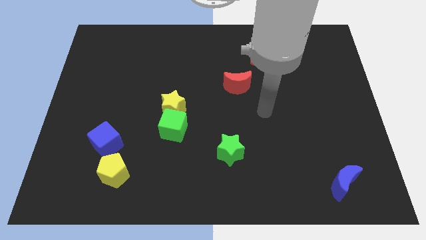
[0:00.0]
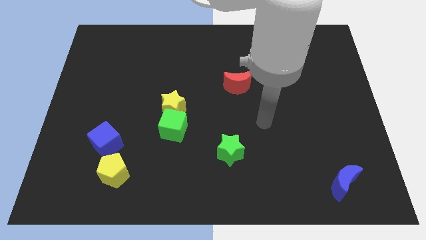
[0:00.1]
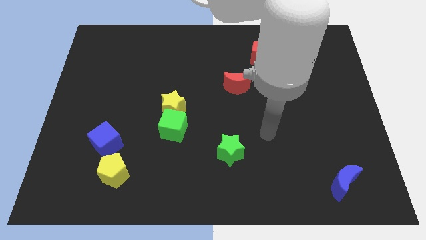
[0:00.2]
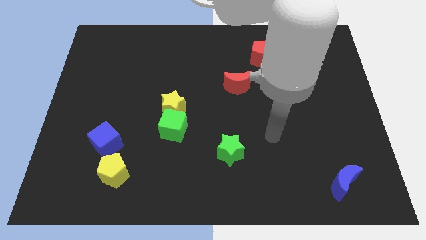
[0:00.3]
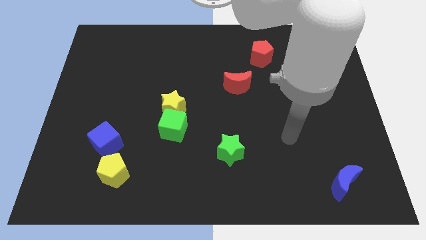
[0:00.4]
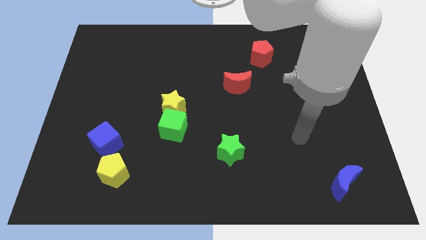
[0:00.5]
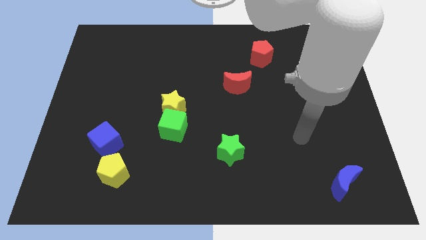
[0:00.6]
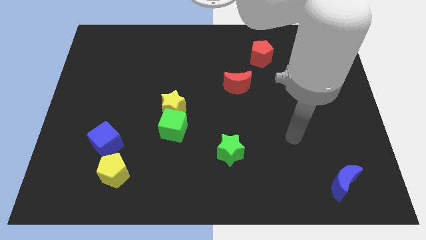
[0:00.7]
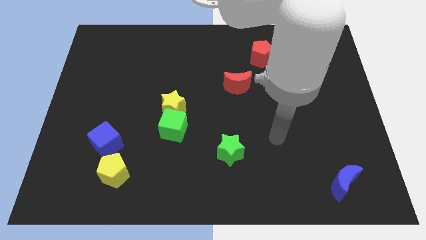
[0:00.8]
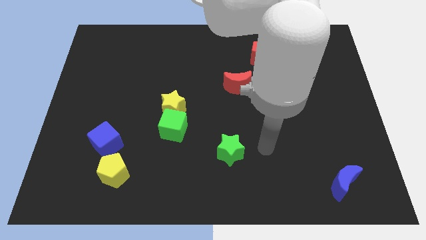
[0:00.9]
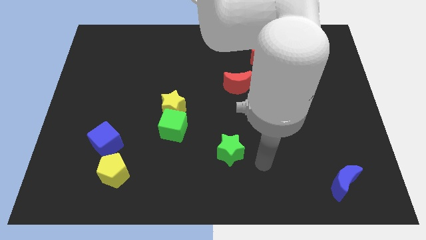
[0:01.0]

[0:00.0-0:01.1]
point your arm at the right of the green star

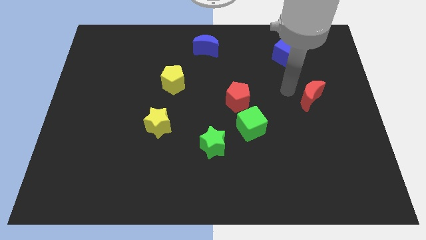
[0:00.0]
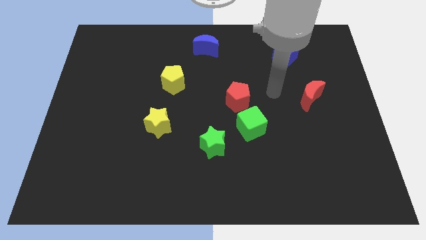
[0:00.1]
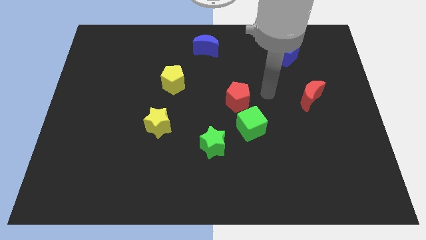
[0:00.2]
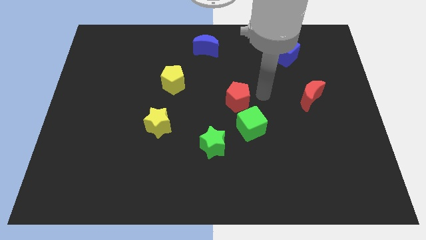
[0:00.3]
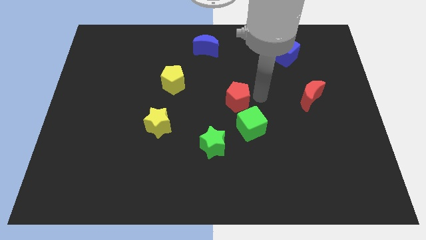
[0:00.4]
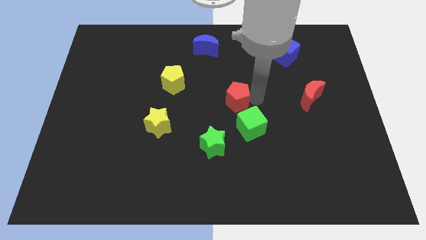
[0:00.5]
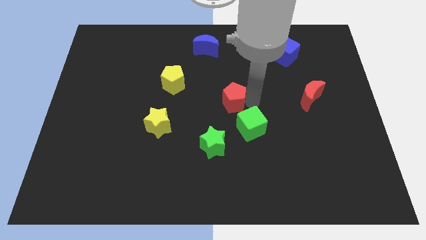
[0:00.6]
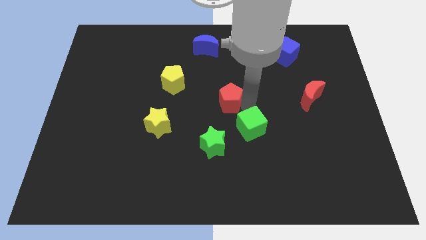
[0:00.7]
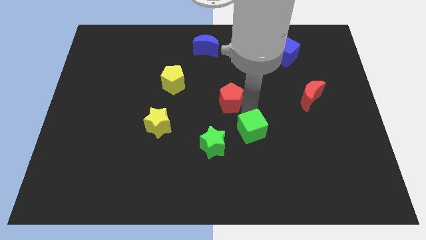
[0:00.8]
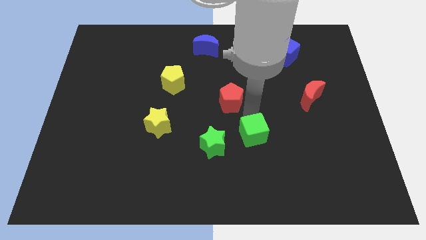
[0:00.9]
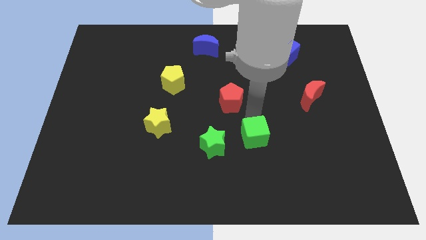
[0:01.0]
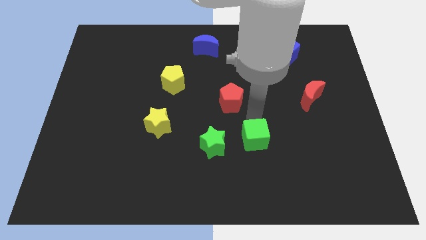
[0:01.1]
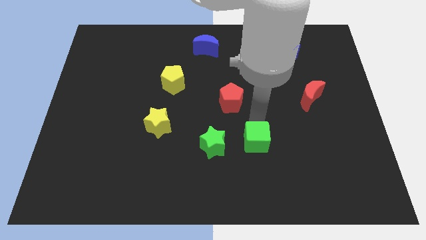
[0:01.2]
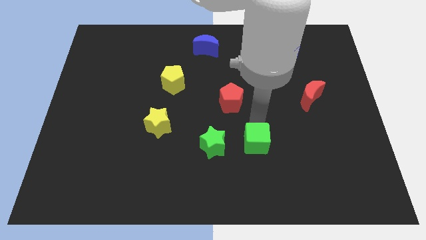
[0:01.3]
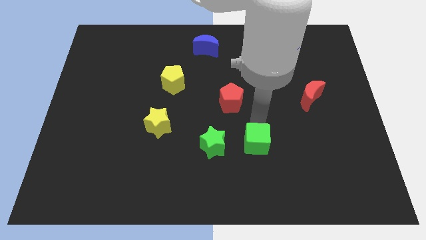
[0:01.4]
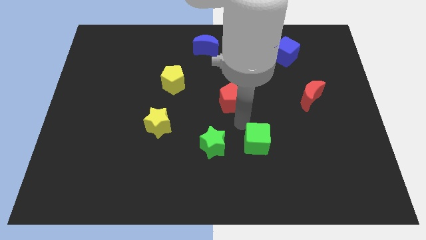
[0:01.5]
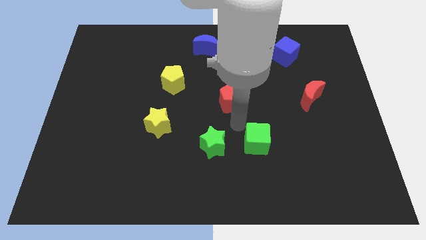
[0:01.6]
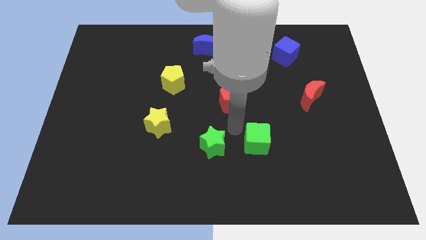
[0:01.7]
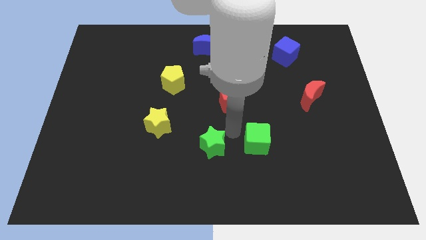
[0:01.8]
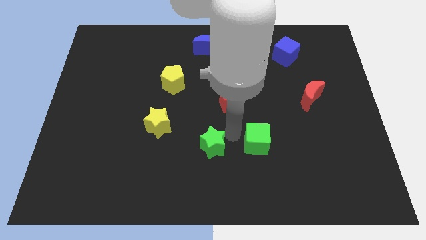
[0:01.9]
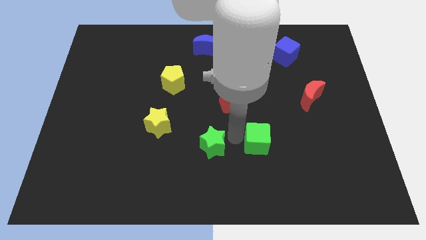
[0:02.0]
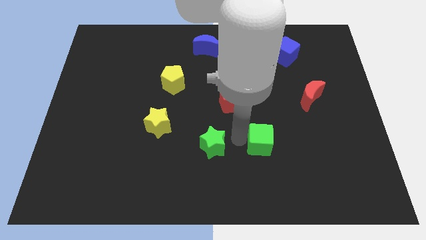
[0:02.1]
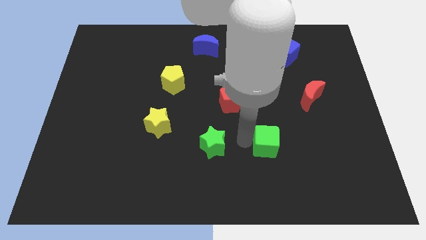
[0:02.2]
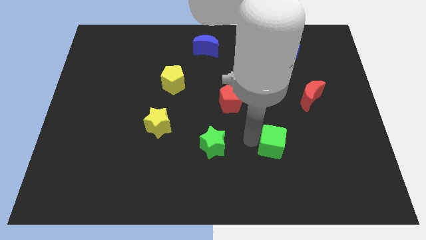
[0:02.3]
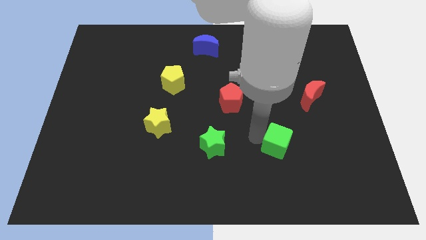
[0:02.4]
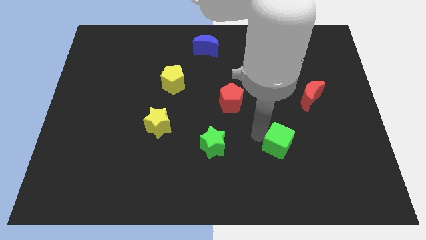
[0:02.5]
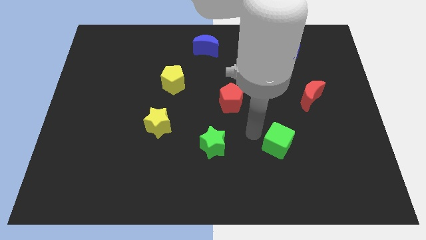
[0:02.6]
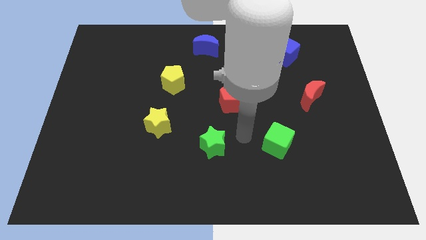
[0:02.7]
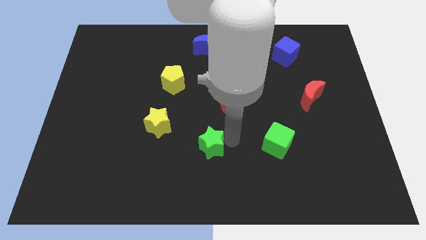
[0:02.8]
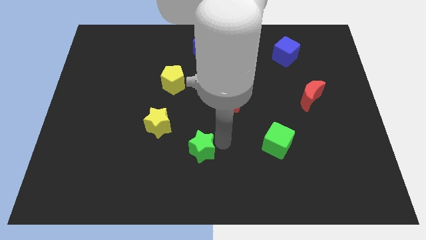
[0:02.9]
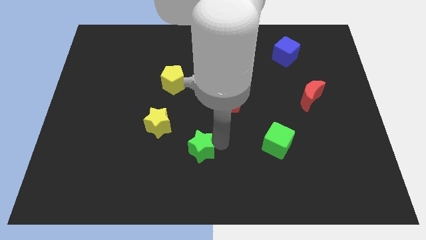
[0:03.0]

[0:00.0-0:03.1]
place the green cube below the red moon

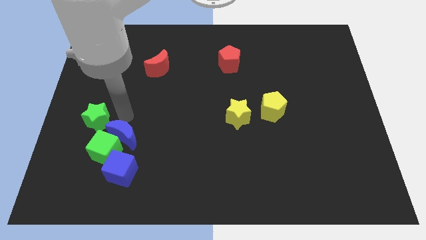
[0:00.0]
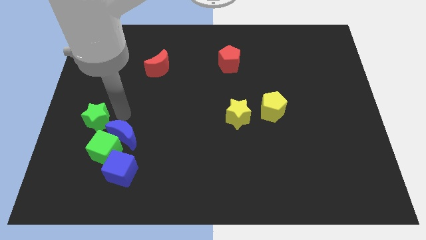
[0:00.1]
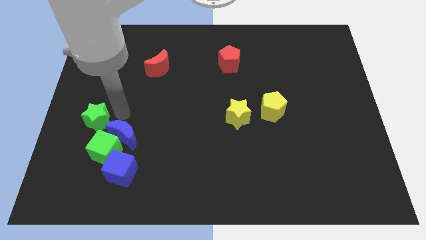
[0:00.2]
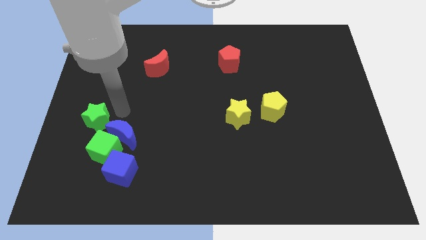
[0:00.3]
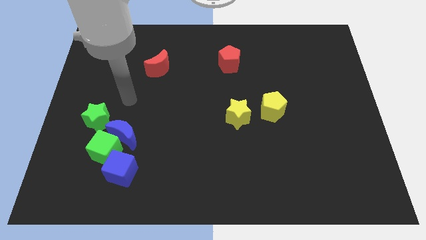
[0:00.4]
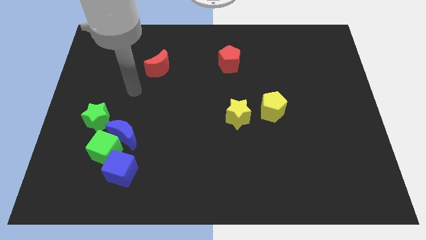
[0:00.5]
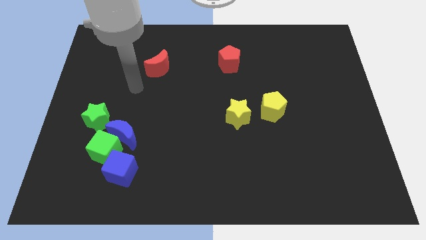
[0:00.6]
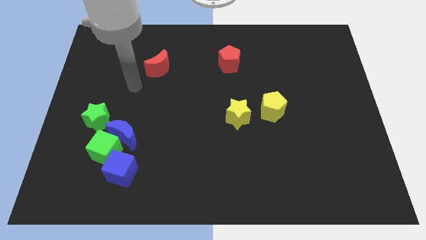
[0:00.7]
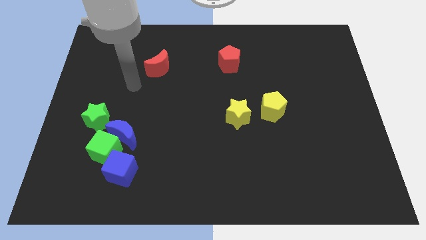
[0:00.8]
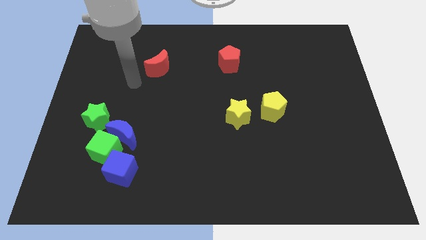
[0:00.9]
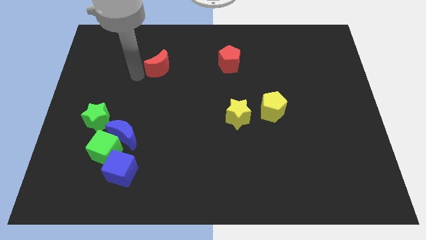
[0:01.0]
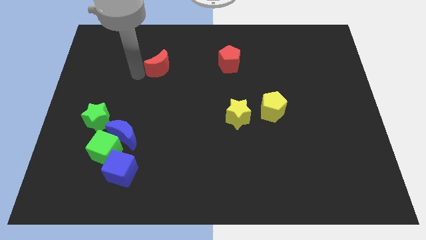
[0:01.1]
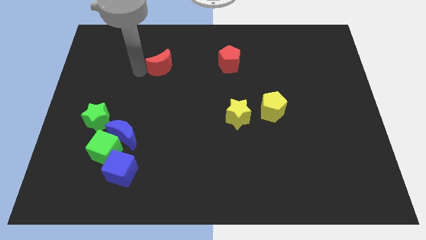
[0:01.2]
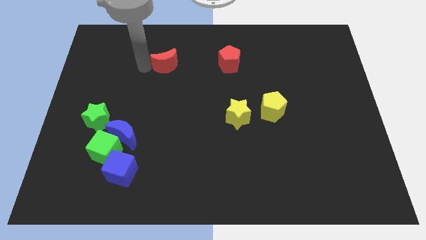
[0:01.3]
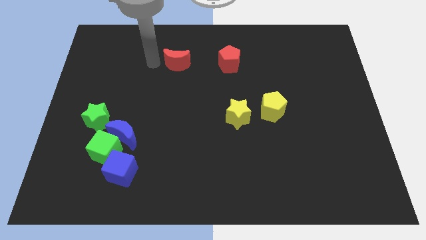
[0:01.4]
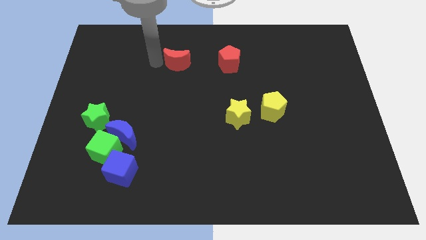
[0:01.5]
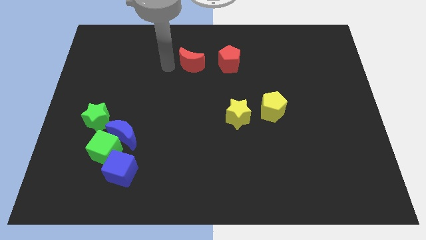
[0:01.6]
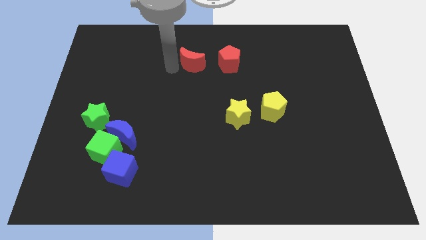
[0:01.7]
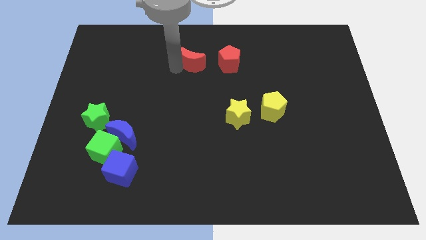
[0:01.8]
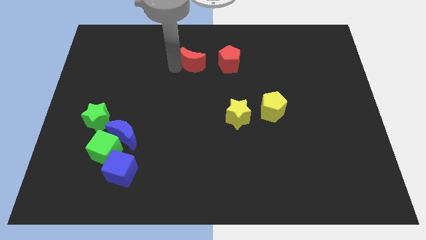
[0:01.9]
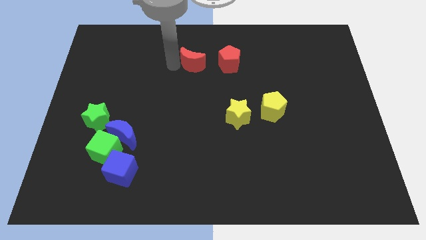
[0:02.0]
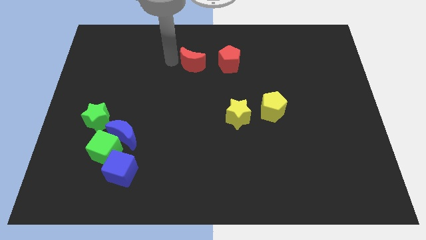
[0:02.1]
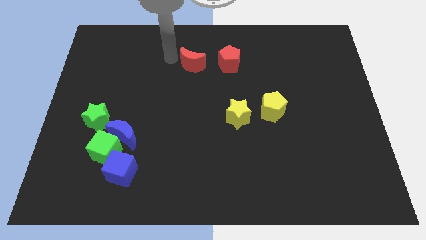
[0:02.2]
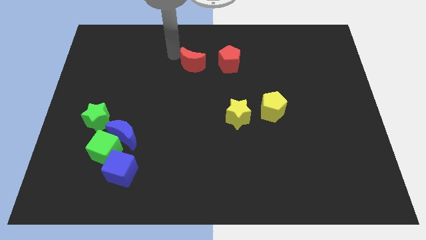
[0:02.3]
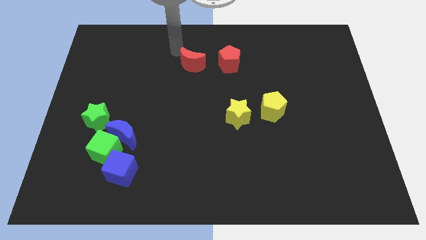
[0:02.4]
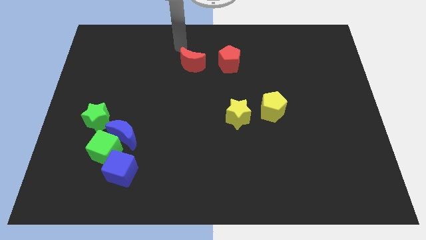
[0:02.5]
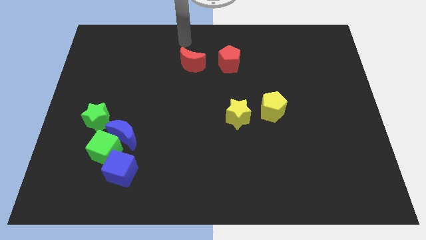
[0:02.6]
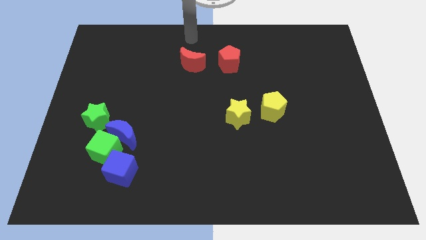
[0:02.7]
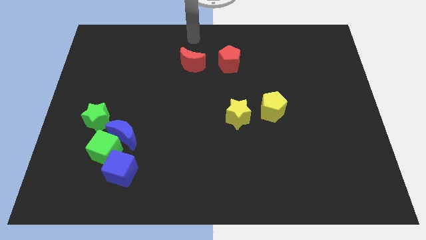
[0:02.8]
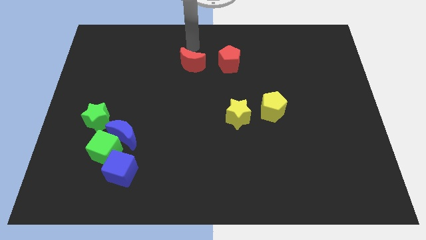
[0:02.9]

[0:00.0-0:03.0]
move the red crescent near to the red pentagon

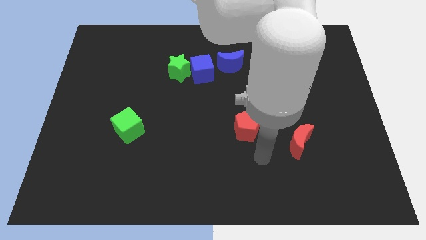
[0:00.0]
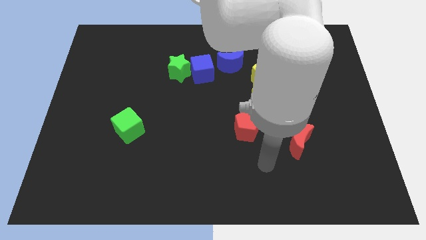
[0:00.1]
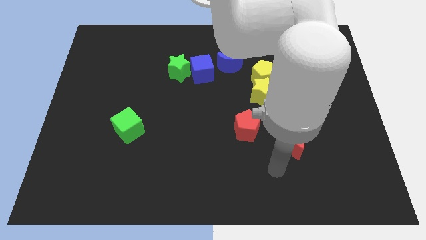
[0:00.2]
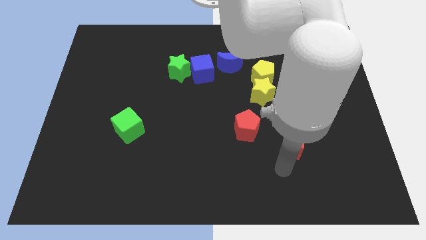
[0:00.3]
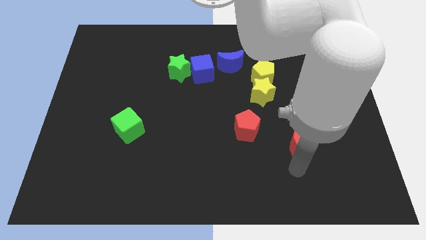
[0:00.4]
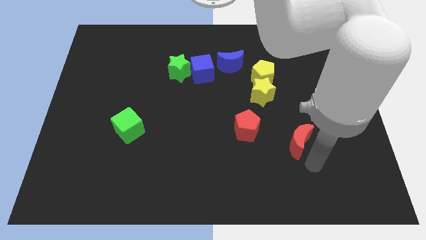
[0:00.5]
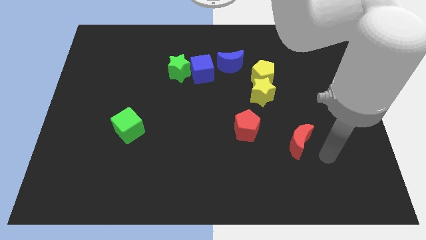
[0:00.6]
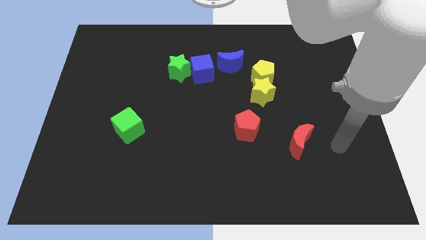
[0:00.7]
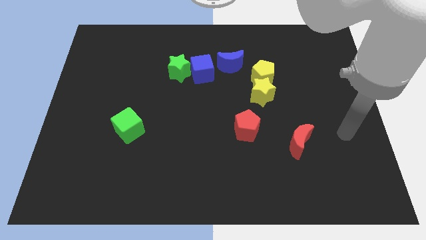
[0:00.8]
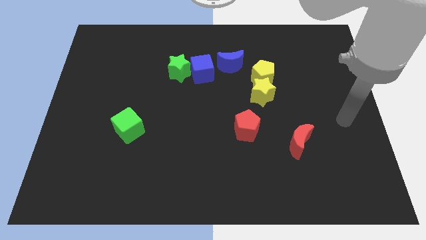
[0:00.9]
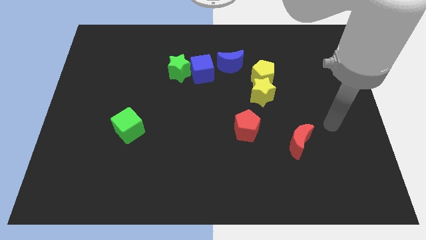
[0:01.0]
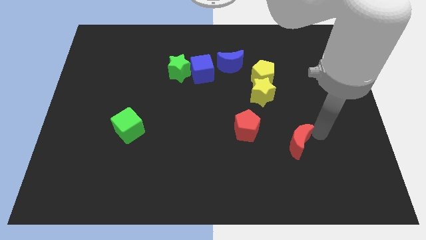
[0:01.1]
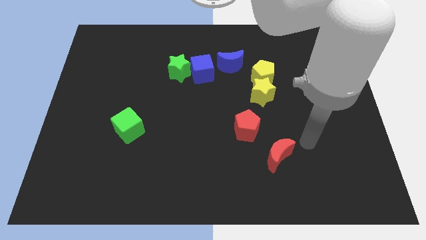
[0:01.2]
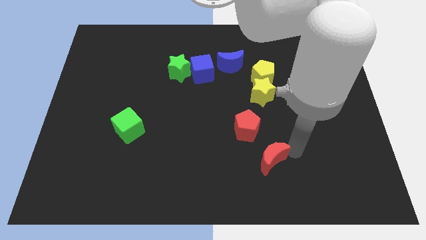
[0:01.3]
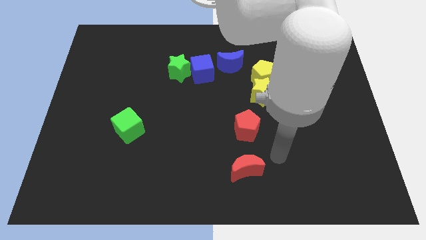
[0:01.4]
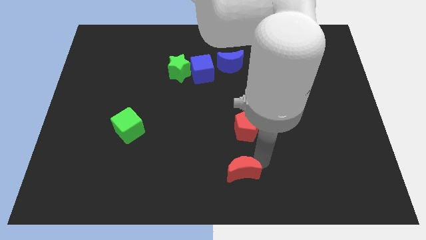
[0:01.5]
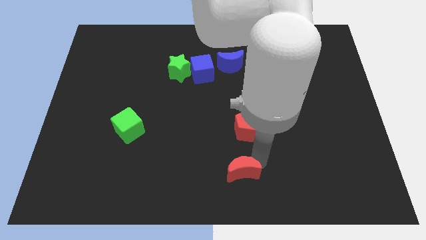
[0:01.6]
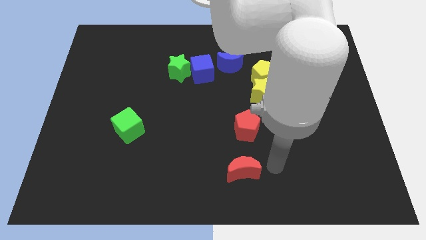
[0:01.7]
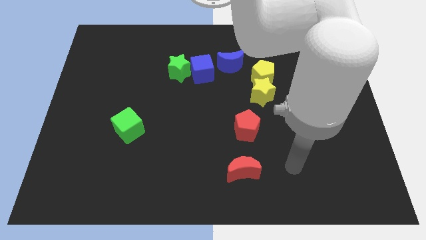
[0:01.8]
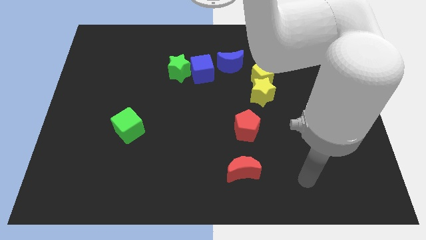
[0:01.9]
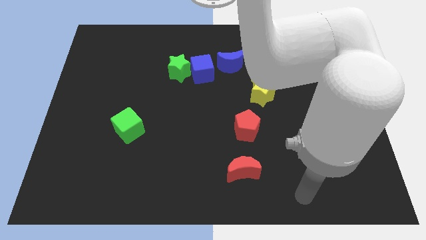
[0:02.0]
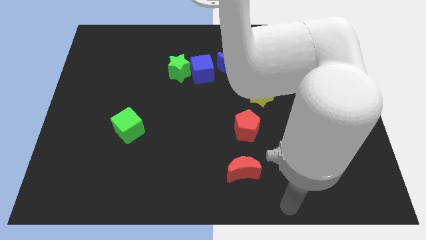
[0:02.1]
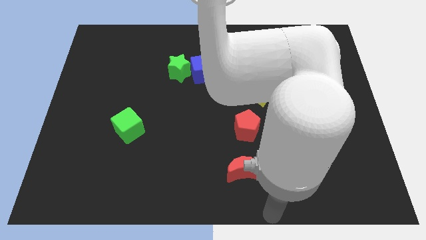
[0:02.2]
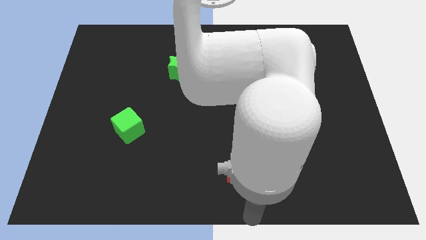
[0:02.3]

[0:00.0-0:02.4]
move the red crescent bottom to the red pentagon
